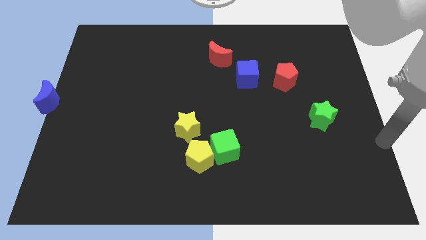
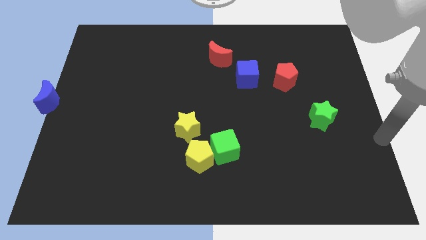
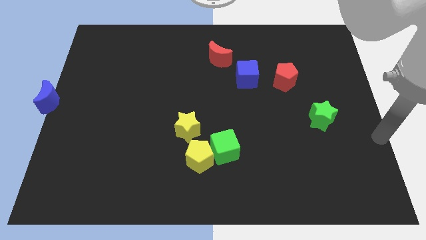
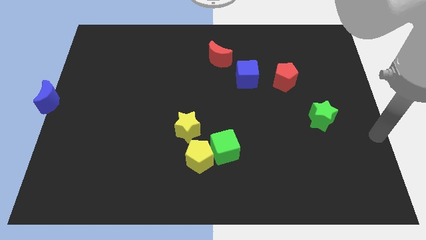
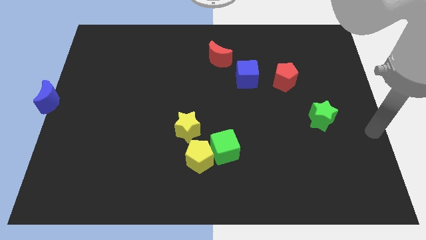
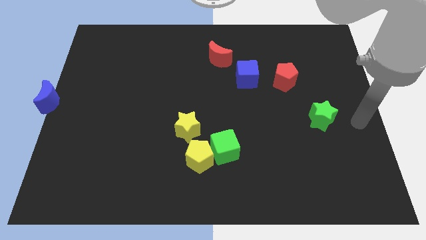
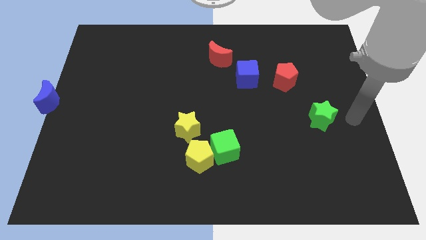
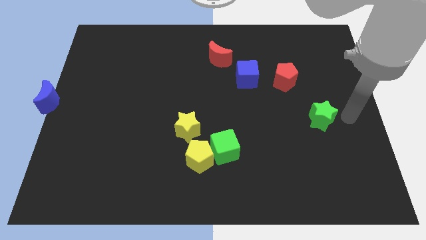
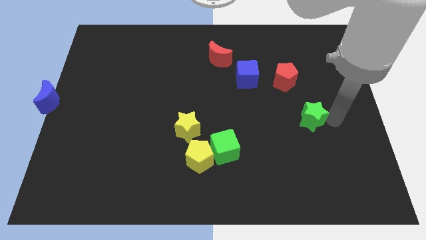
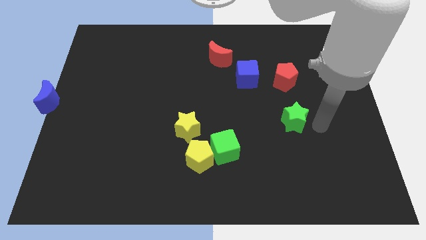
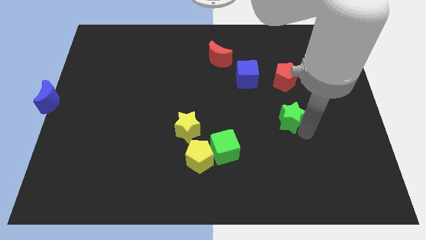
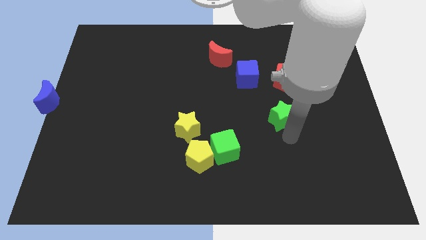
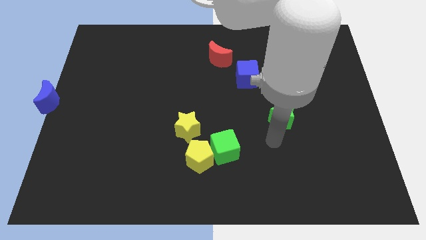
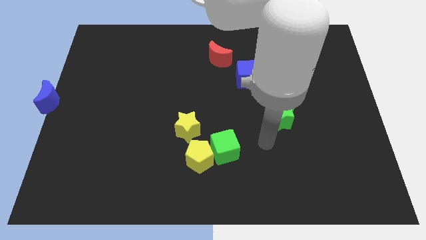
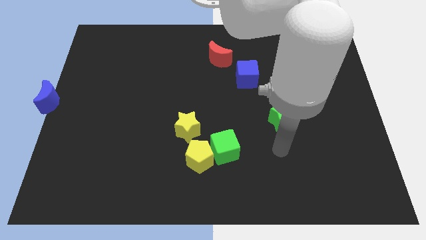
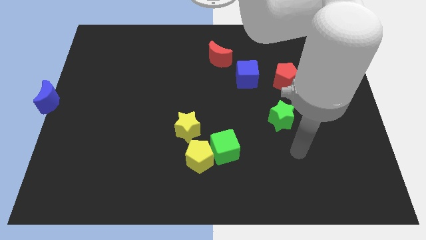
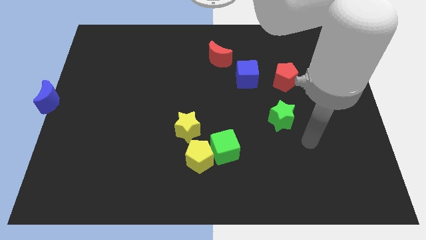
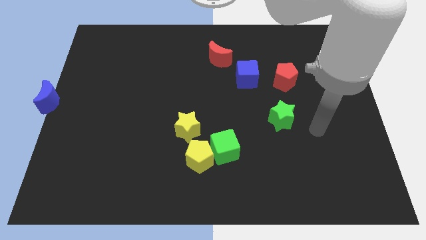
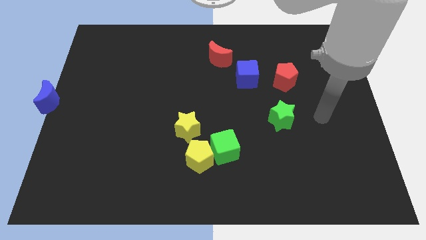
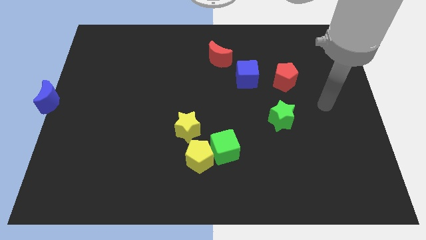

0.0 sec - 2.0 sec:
move green star below red pentagon

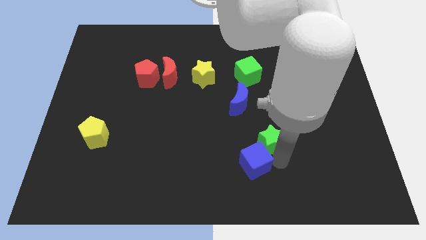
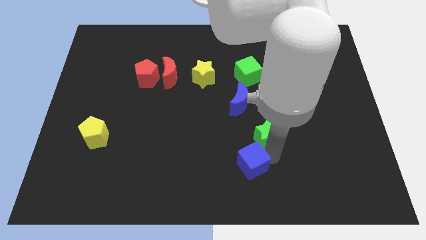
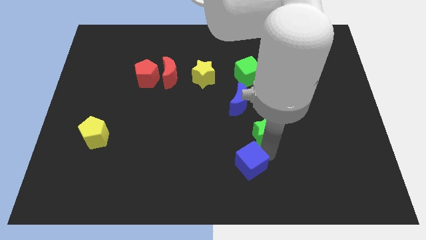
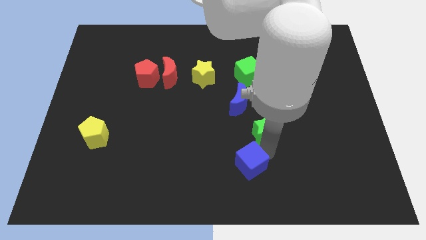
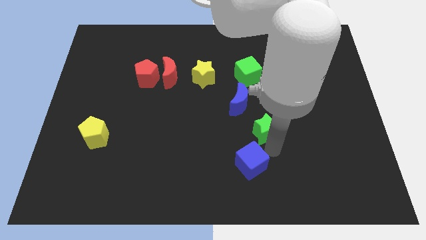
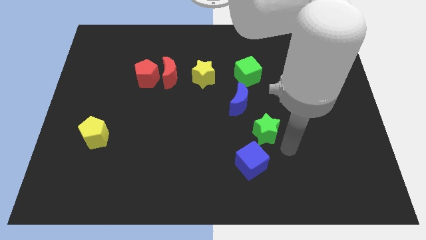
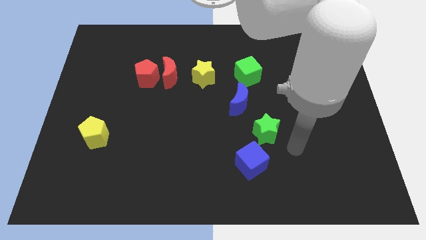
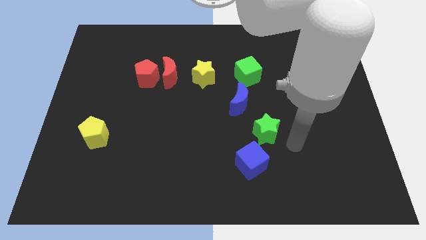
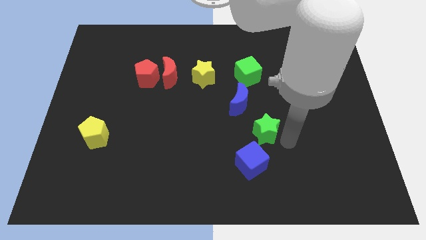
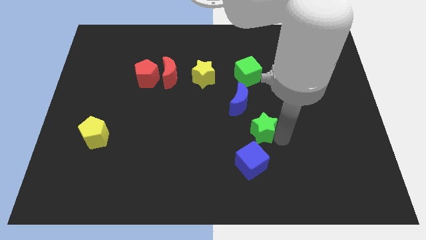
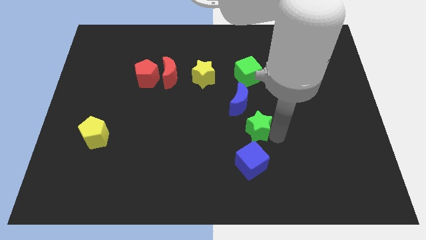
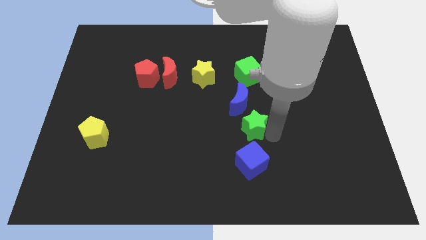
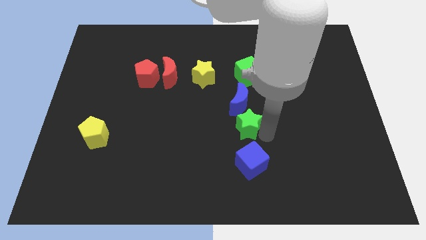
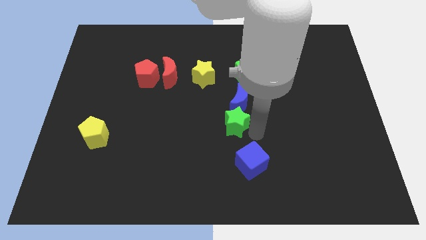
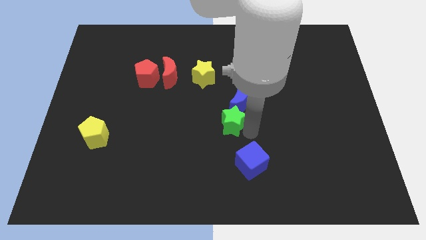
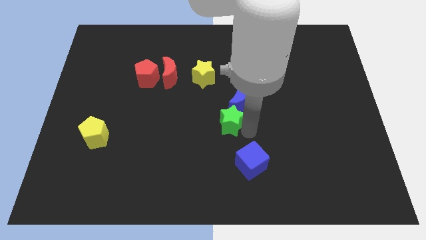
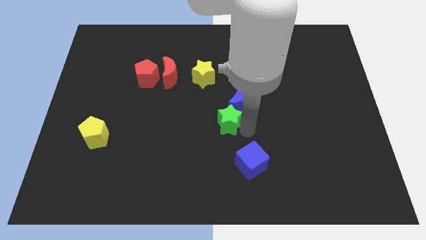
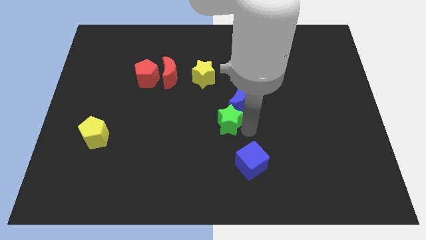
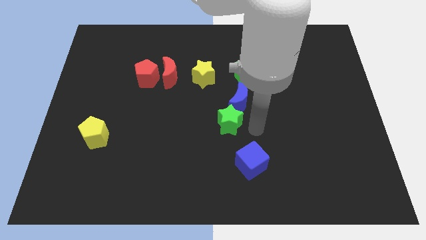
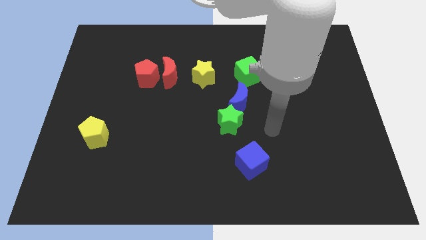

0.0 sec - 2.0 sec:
push the green star into the blue crescent

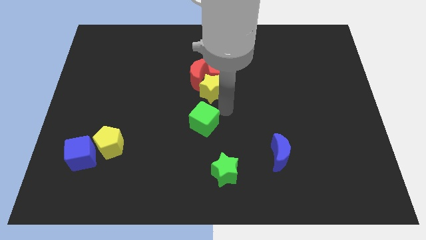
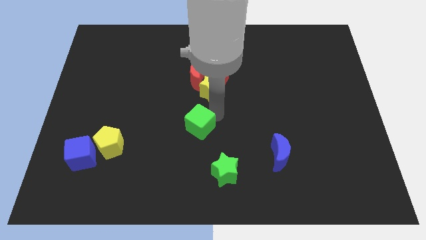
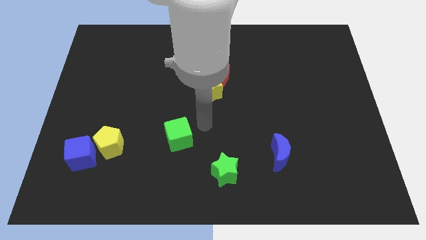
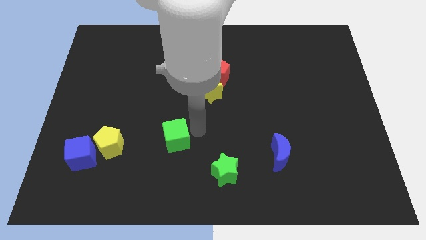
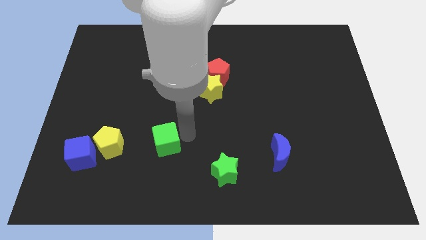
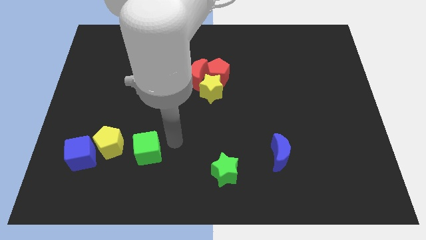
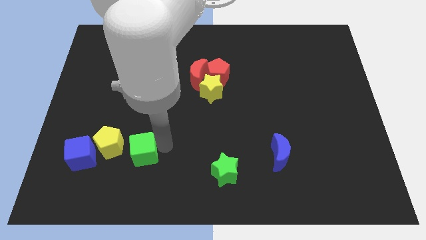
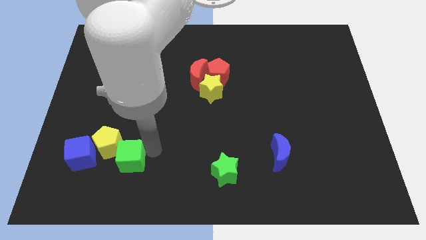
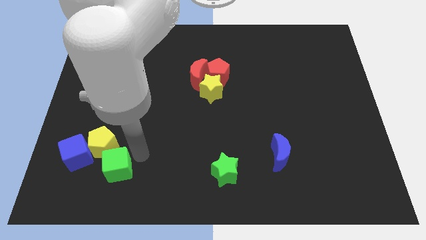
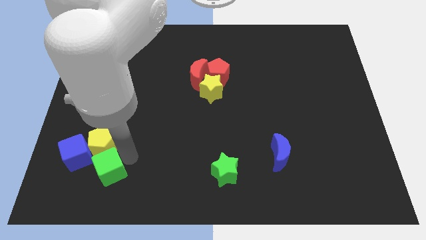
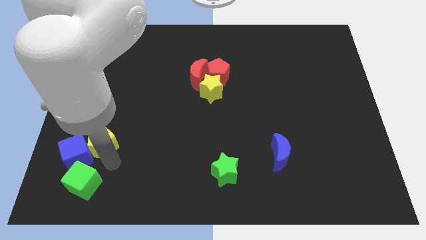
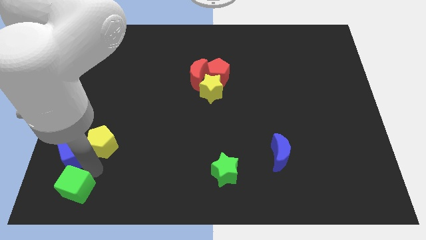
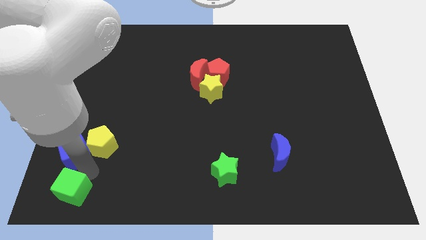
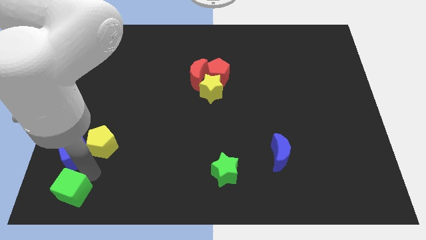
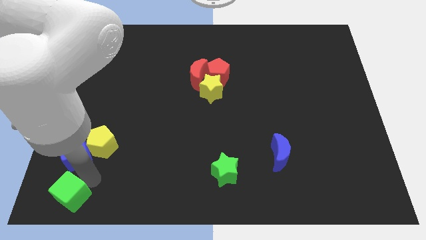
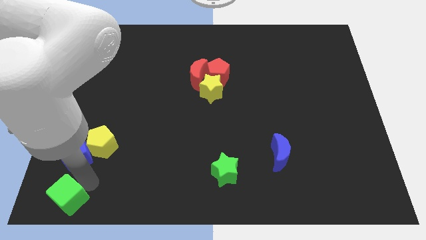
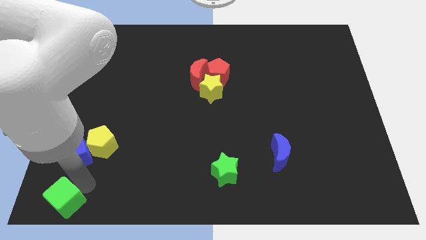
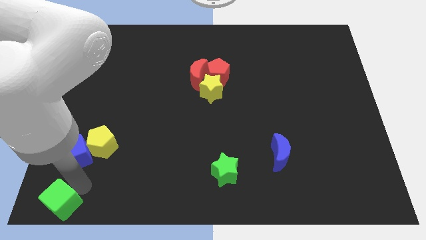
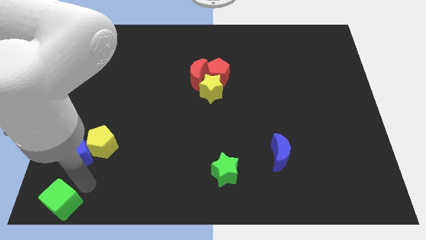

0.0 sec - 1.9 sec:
push green cube to the left bottom

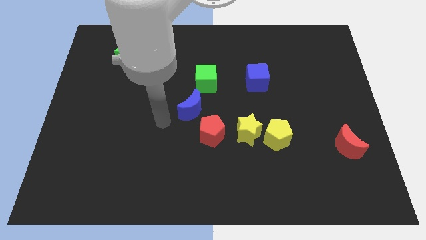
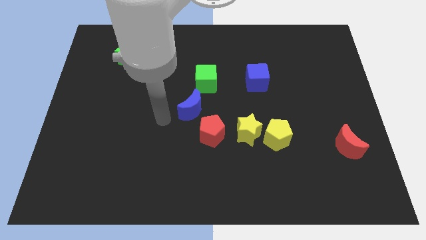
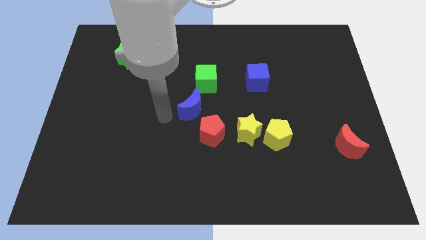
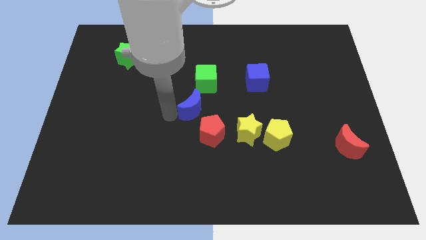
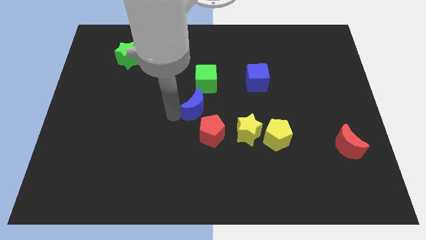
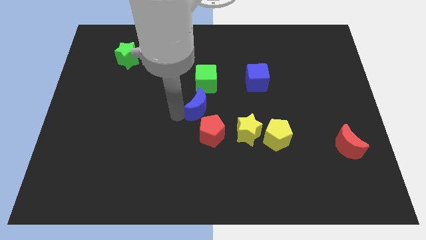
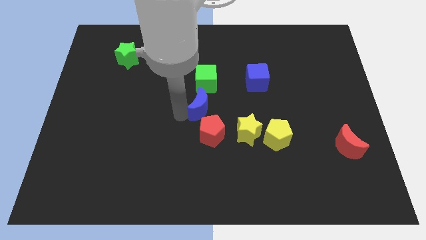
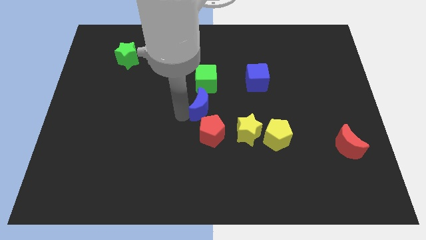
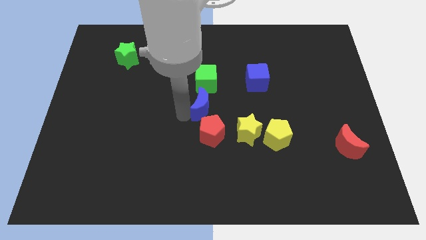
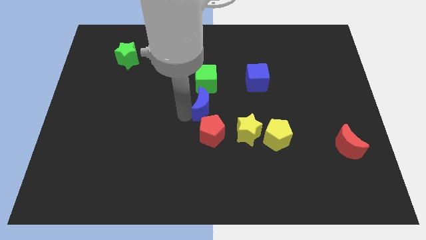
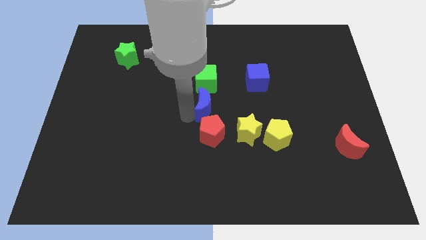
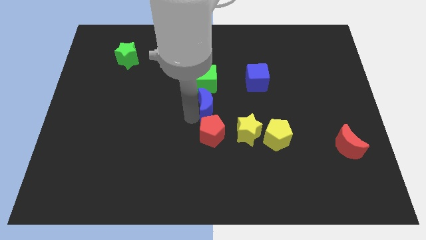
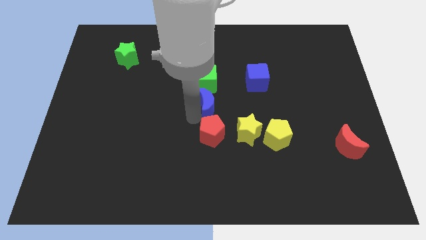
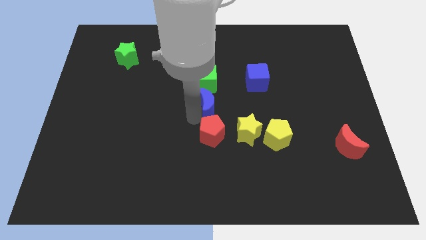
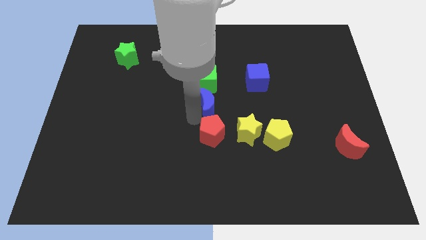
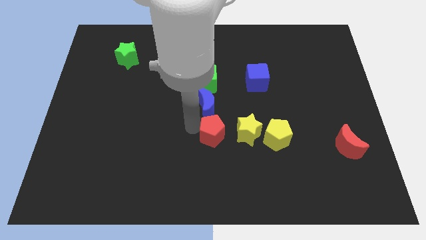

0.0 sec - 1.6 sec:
move the blue crescent in a vertical line above the red pentagon

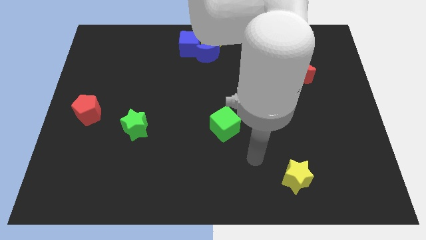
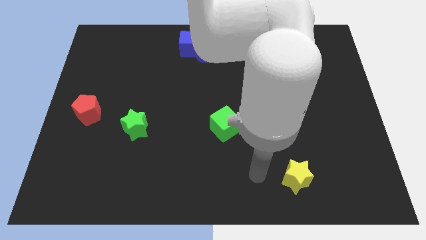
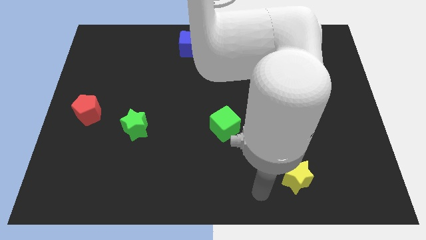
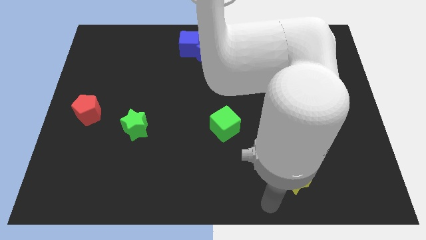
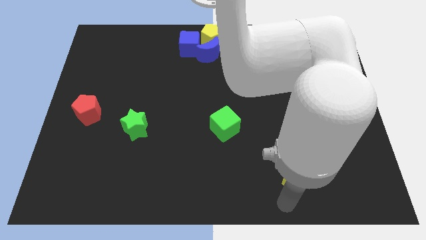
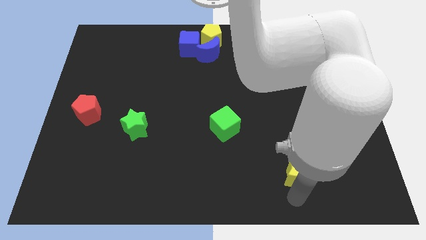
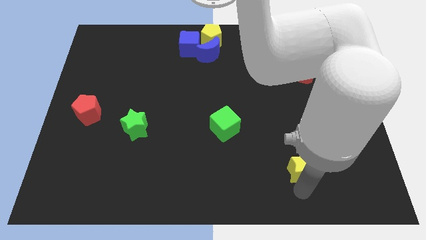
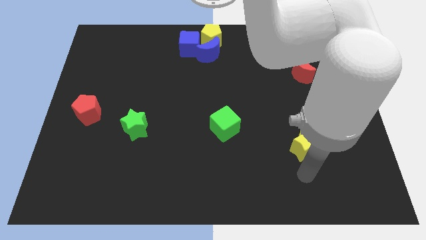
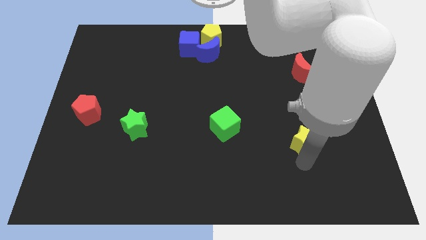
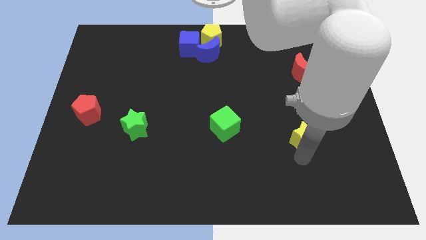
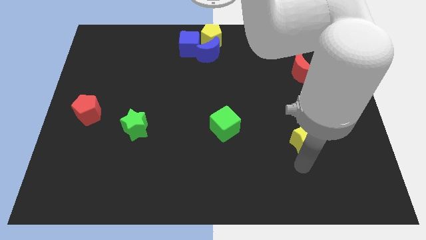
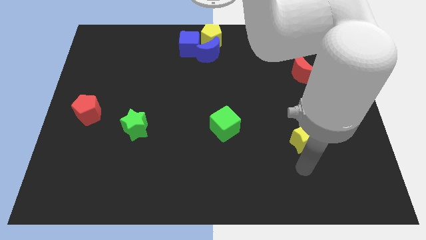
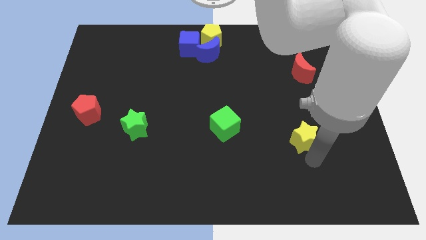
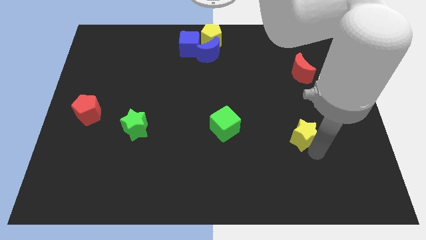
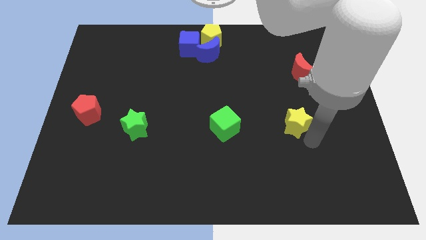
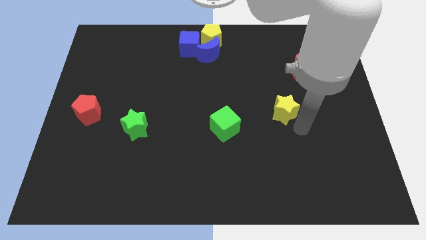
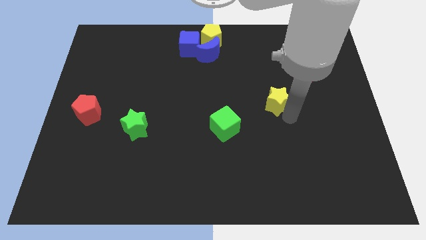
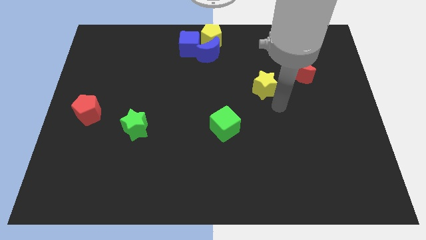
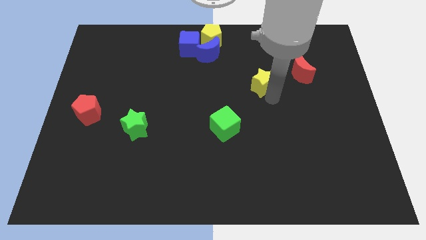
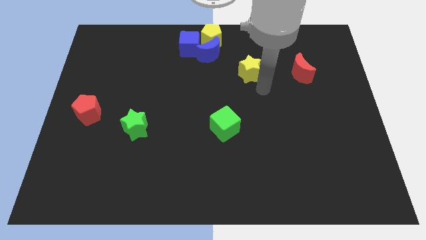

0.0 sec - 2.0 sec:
push the yellow star to the top
